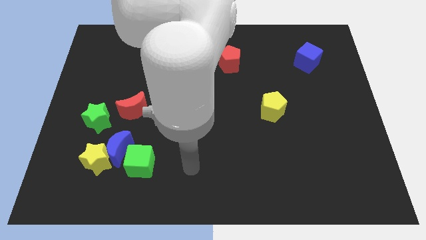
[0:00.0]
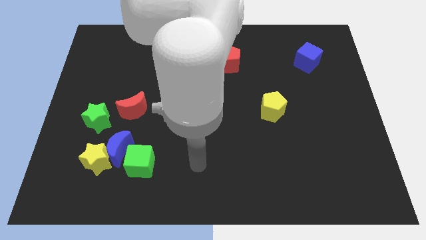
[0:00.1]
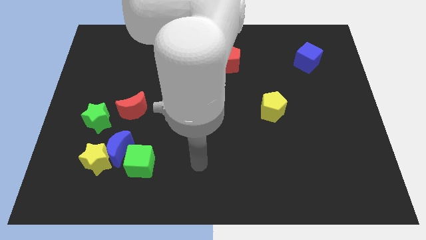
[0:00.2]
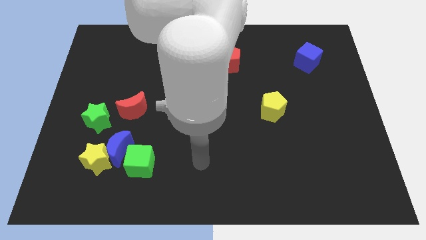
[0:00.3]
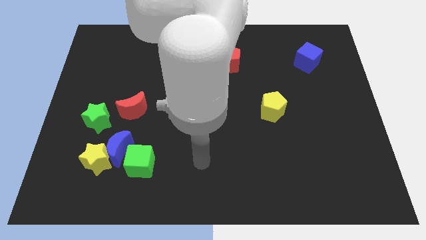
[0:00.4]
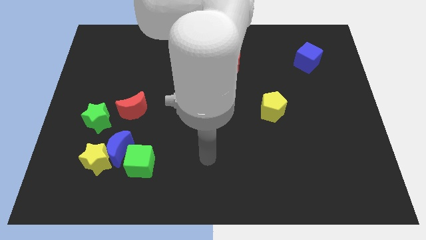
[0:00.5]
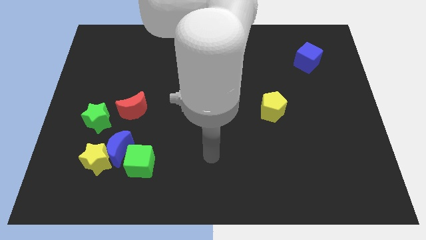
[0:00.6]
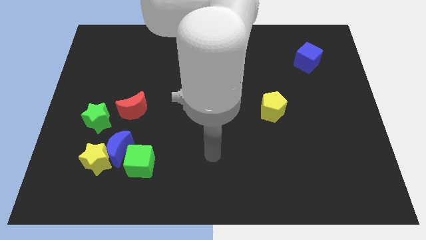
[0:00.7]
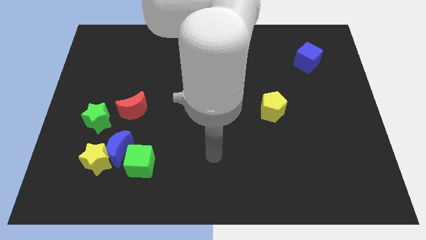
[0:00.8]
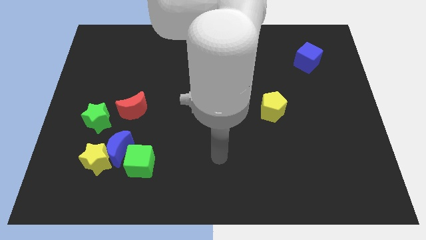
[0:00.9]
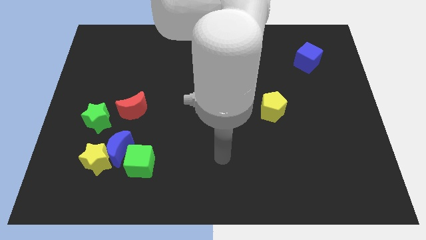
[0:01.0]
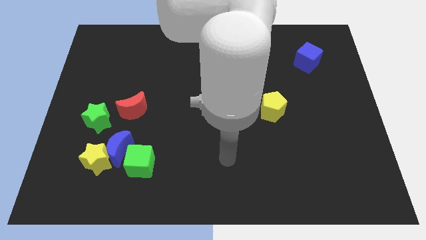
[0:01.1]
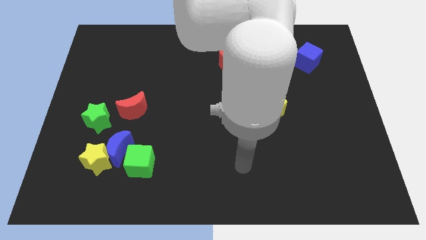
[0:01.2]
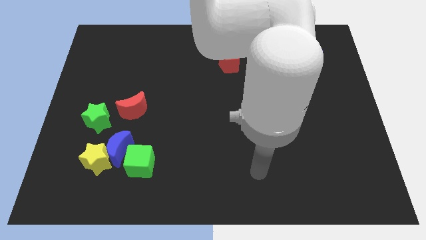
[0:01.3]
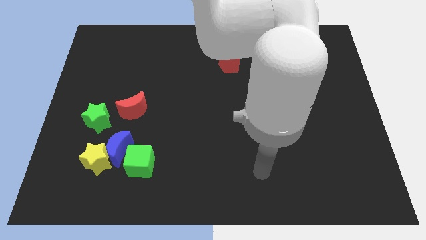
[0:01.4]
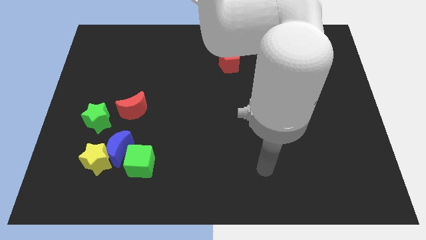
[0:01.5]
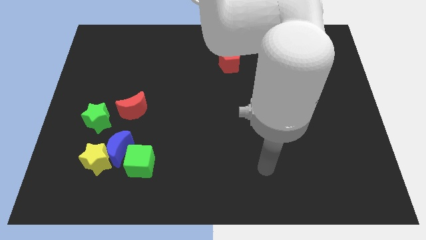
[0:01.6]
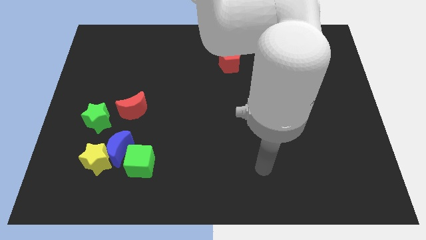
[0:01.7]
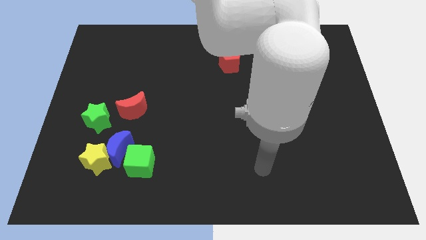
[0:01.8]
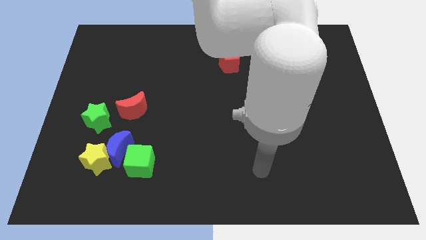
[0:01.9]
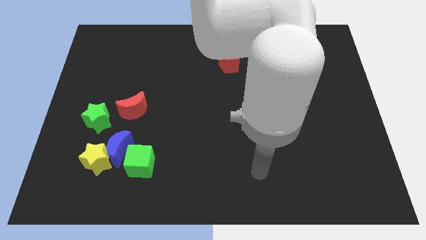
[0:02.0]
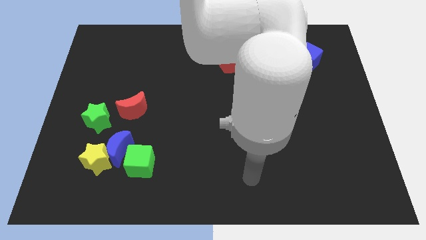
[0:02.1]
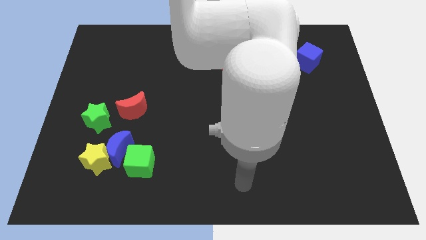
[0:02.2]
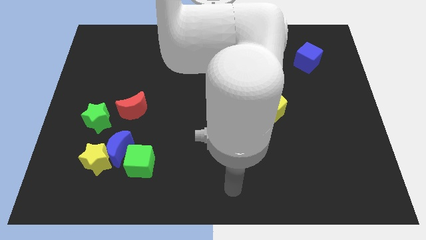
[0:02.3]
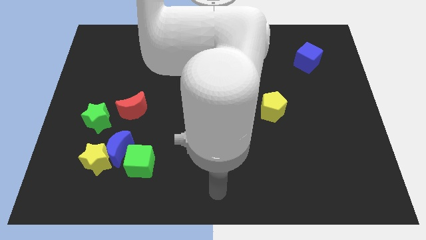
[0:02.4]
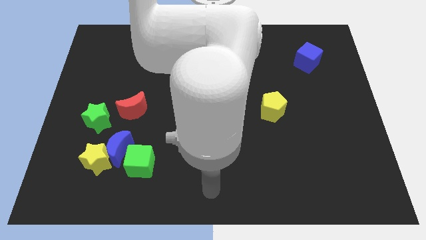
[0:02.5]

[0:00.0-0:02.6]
go and point your hand at the bottom center of the board

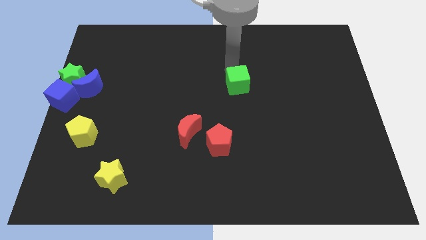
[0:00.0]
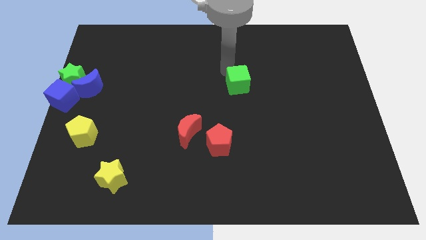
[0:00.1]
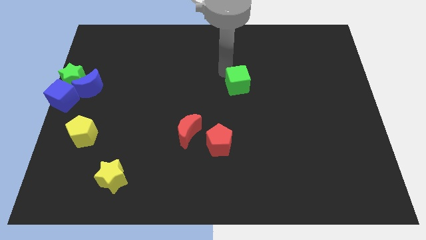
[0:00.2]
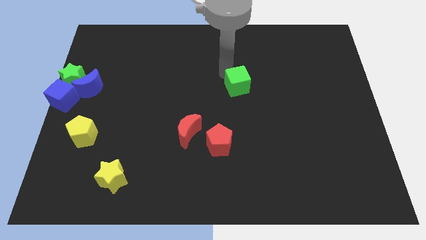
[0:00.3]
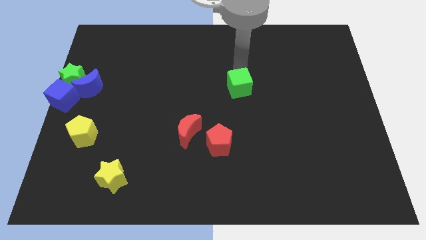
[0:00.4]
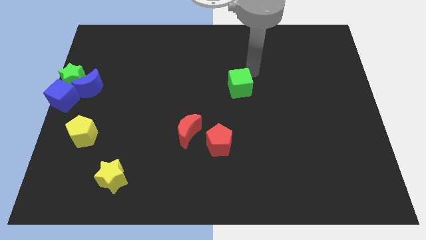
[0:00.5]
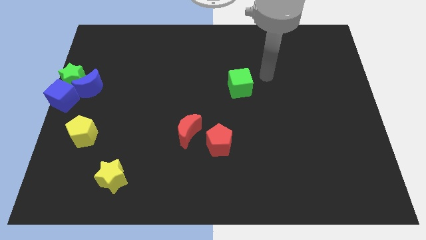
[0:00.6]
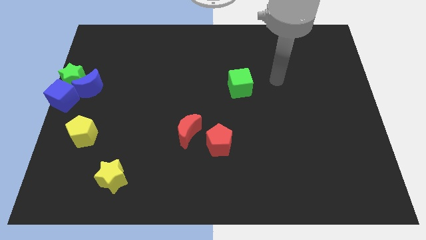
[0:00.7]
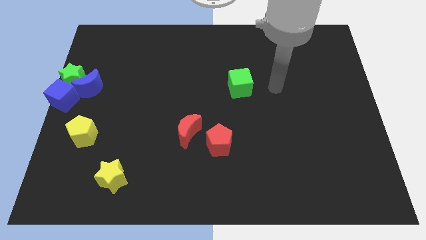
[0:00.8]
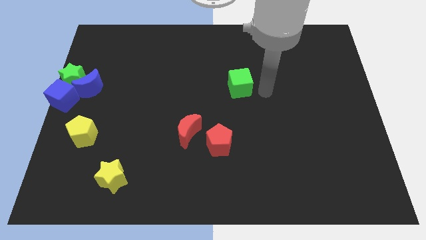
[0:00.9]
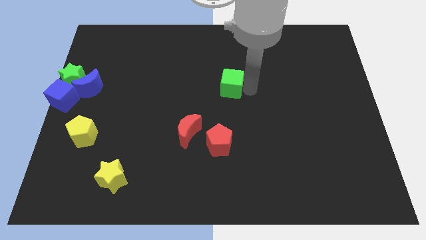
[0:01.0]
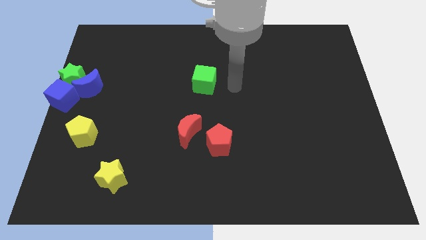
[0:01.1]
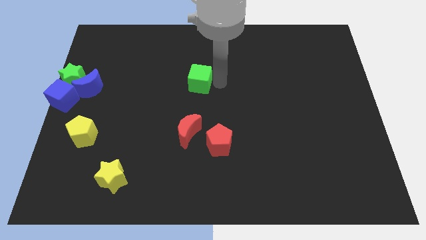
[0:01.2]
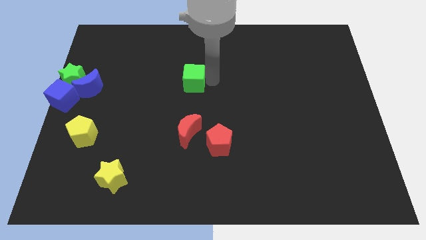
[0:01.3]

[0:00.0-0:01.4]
place the green cube vertically to the top of the red moon

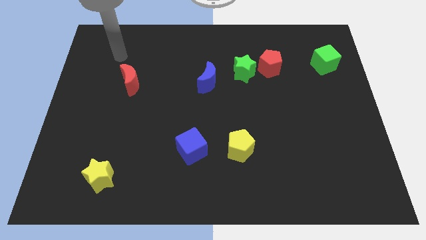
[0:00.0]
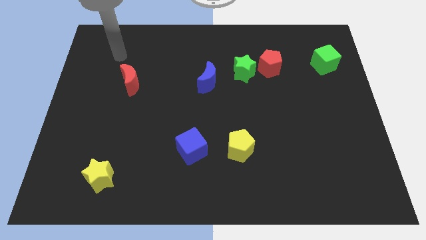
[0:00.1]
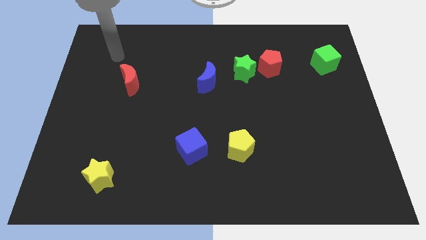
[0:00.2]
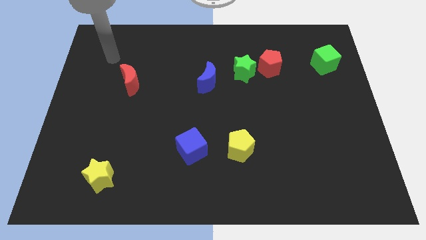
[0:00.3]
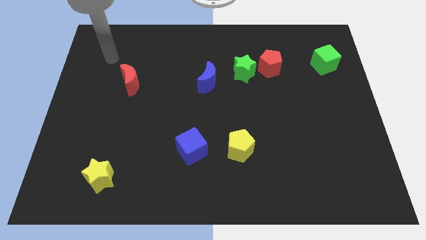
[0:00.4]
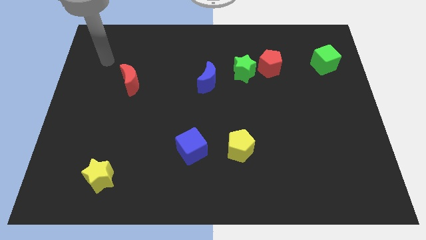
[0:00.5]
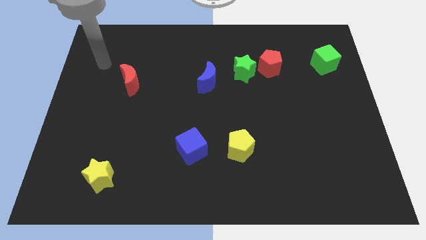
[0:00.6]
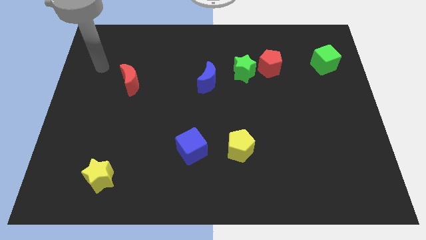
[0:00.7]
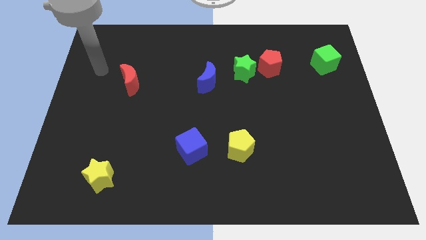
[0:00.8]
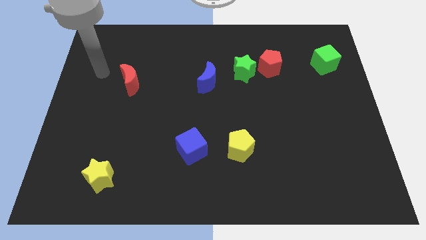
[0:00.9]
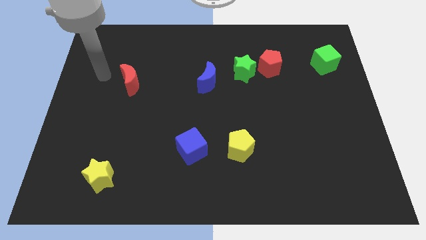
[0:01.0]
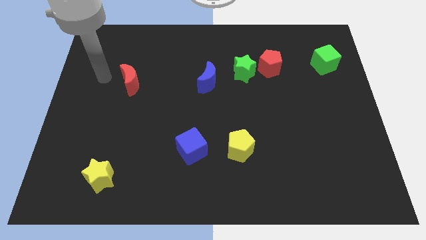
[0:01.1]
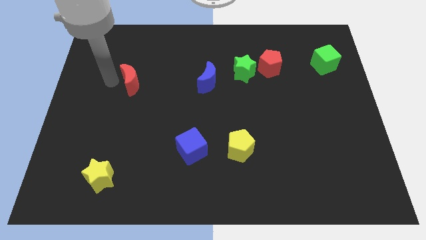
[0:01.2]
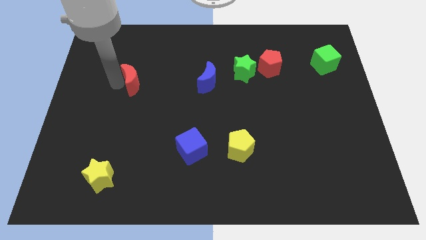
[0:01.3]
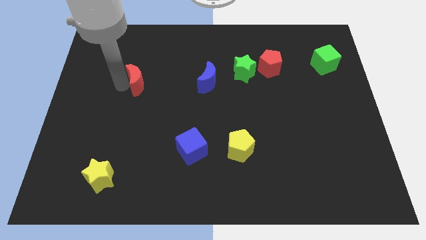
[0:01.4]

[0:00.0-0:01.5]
touch the red moon

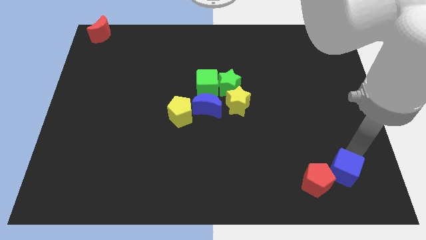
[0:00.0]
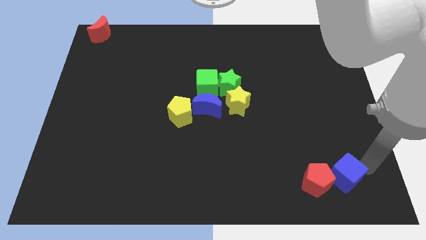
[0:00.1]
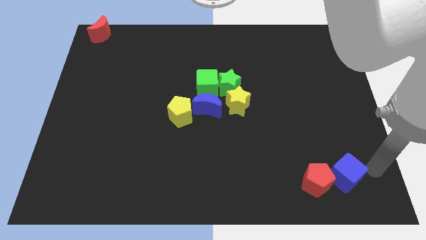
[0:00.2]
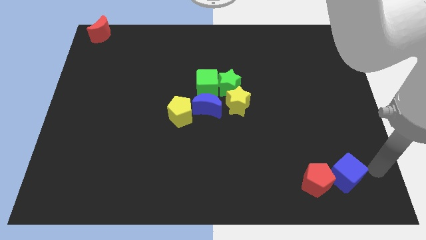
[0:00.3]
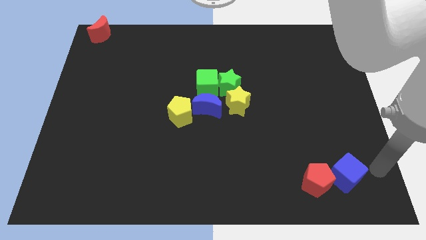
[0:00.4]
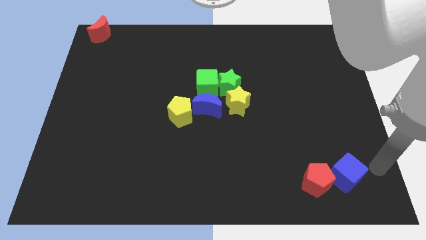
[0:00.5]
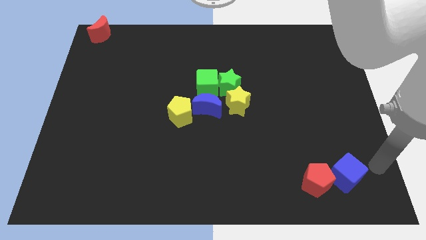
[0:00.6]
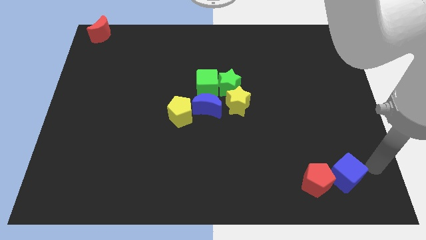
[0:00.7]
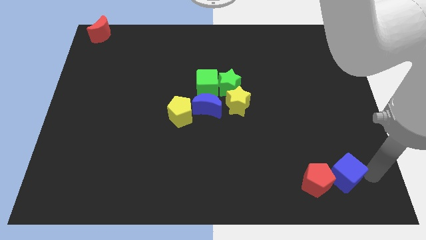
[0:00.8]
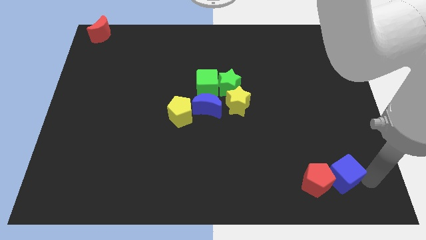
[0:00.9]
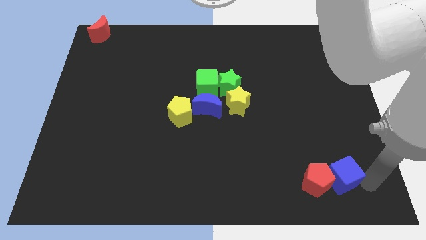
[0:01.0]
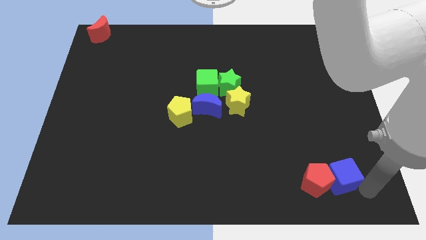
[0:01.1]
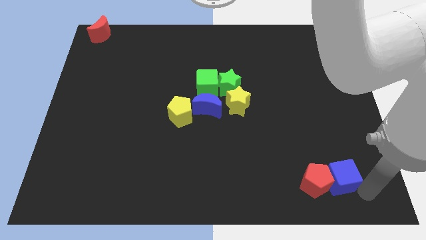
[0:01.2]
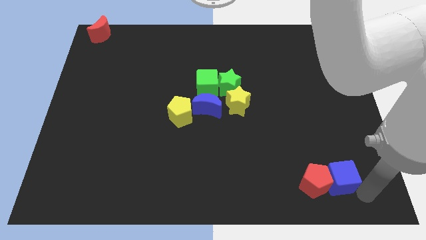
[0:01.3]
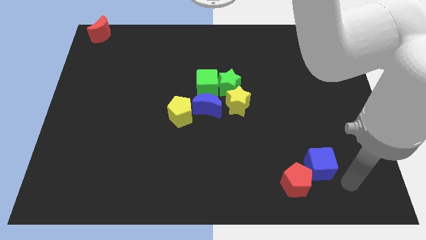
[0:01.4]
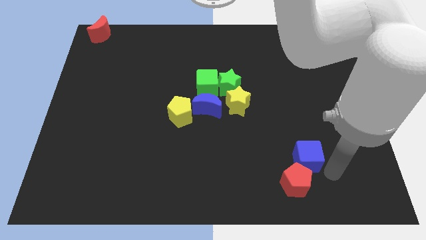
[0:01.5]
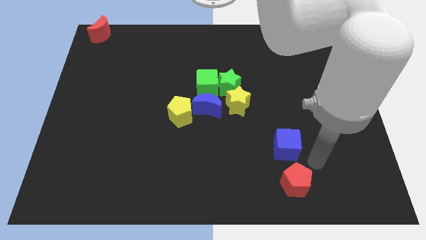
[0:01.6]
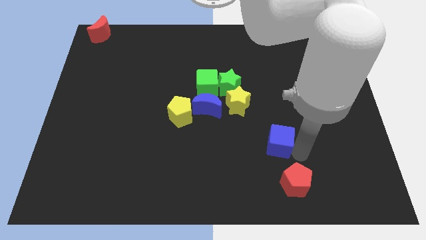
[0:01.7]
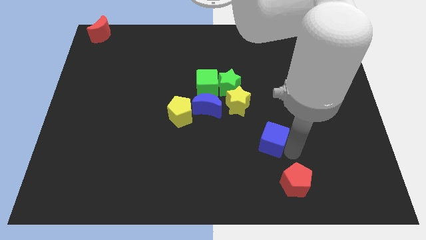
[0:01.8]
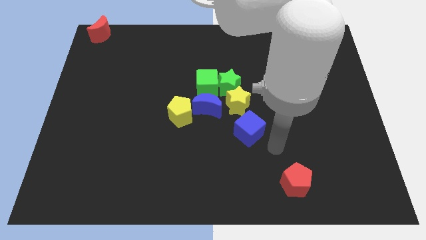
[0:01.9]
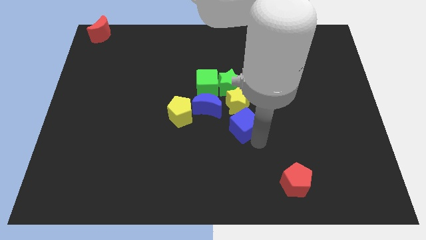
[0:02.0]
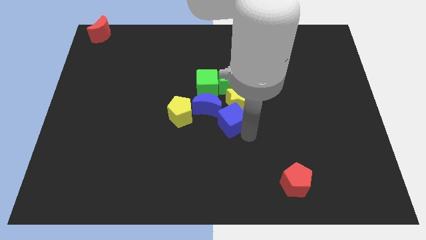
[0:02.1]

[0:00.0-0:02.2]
push the blue cube into the yellow star

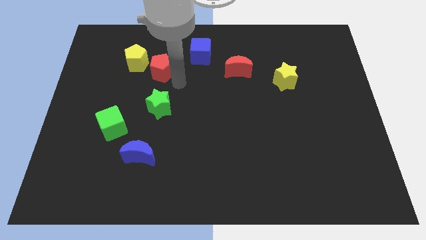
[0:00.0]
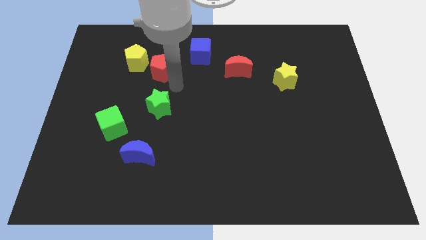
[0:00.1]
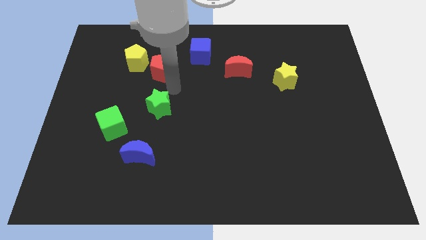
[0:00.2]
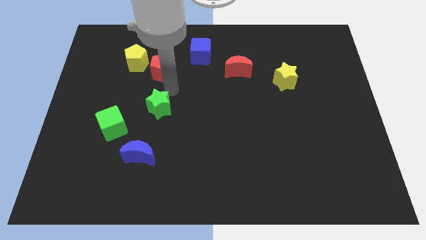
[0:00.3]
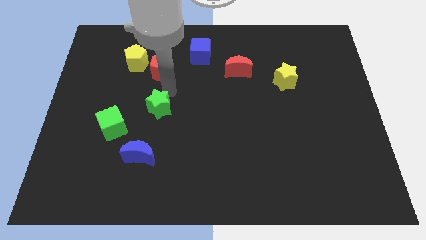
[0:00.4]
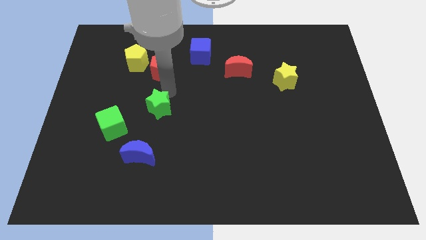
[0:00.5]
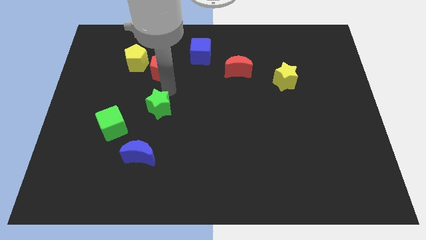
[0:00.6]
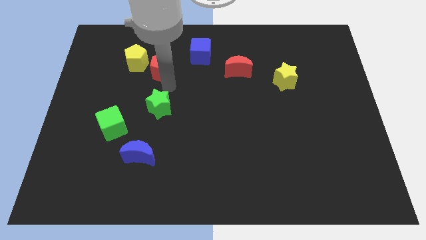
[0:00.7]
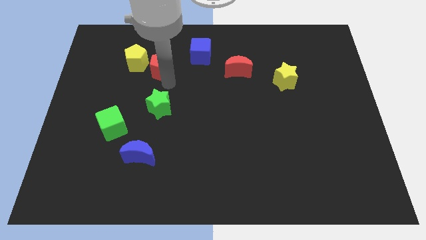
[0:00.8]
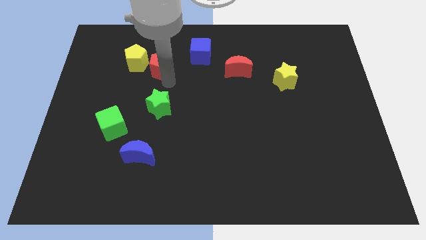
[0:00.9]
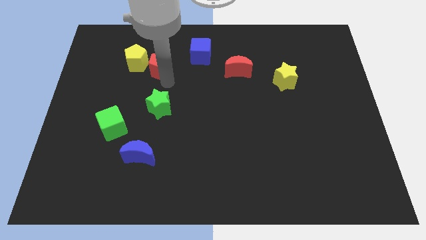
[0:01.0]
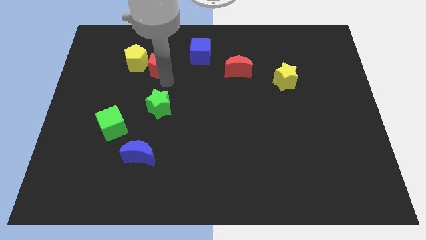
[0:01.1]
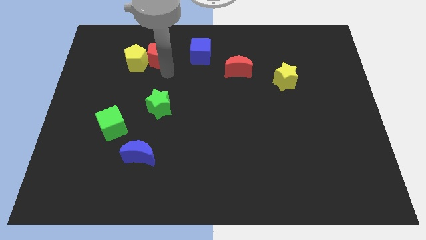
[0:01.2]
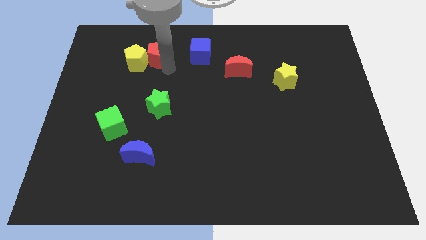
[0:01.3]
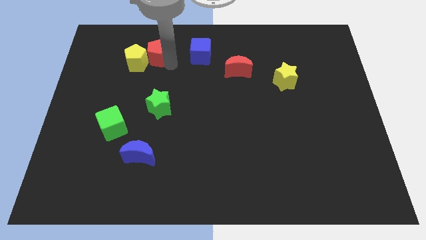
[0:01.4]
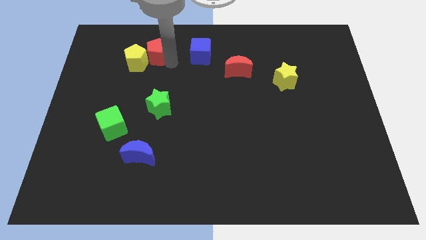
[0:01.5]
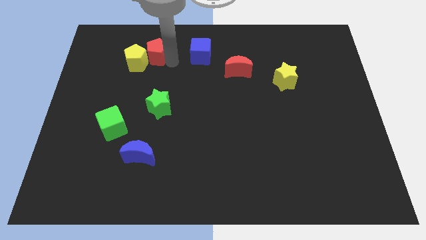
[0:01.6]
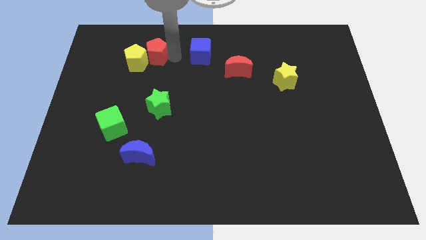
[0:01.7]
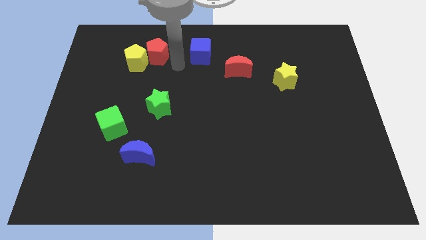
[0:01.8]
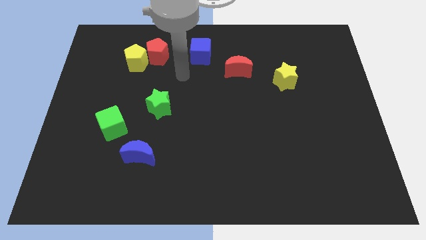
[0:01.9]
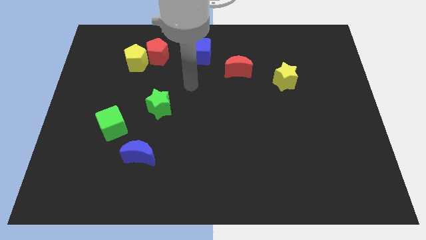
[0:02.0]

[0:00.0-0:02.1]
push the red pentagon to the right top of the yellow pentagon
